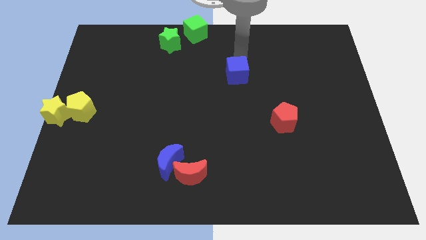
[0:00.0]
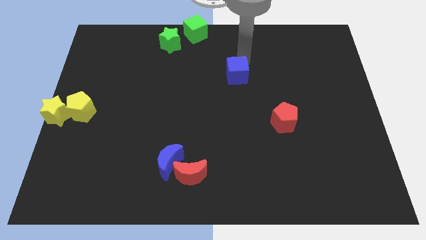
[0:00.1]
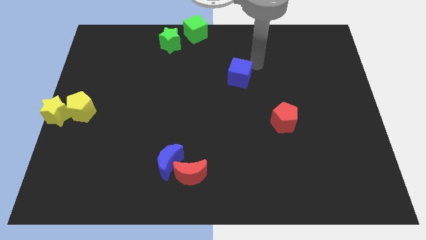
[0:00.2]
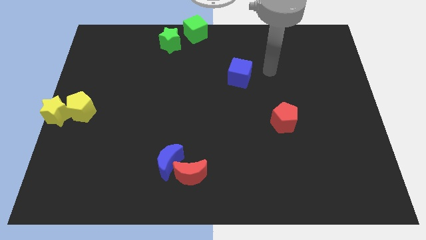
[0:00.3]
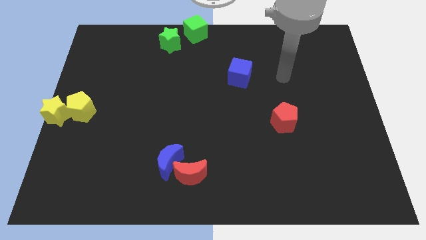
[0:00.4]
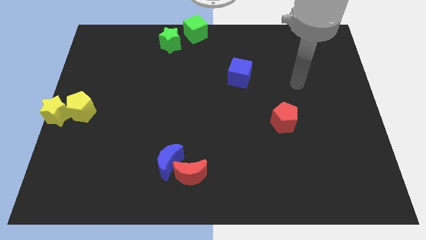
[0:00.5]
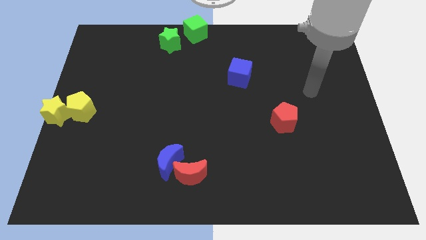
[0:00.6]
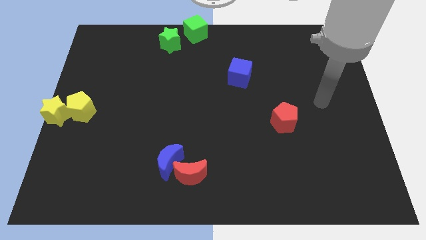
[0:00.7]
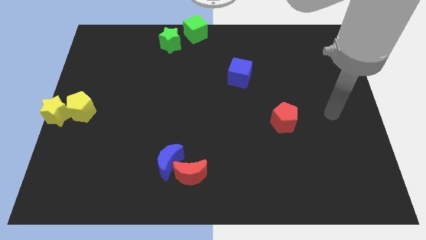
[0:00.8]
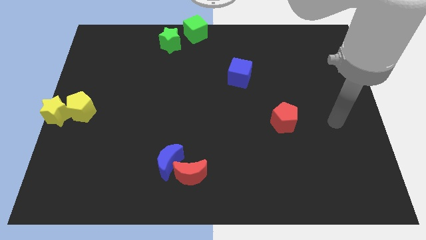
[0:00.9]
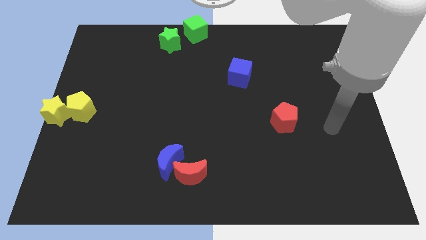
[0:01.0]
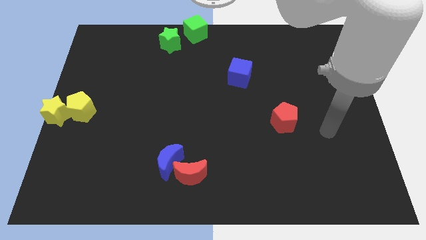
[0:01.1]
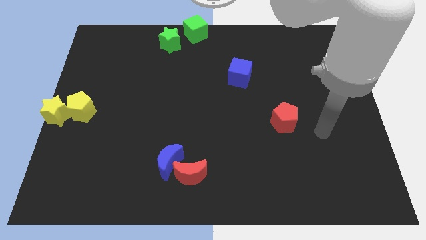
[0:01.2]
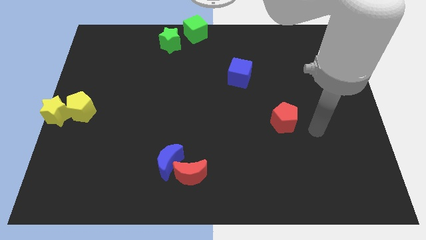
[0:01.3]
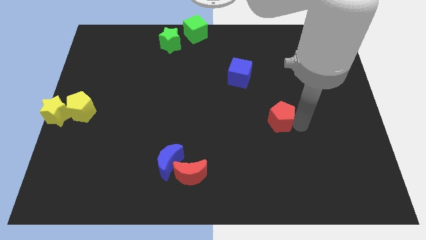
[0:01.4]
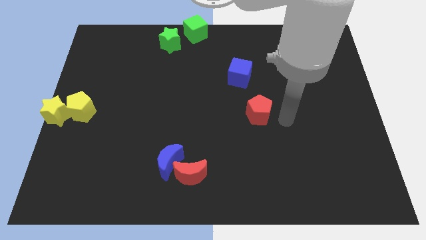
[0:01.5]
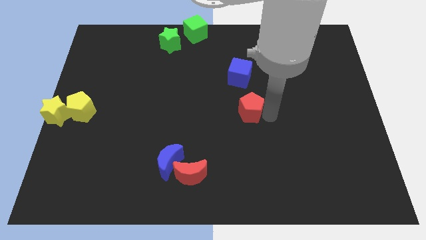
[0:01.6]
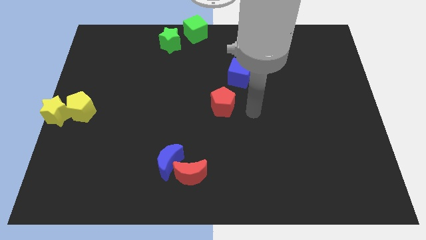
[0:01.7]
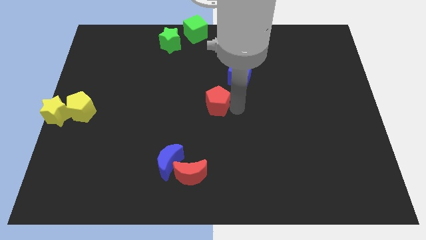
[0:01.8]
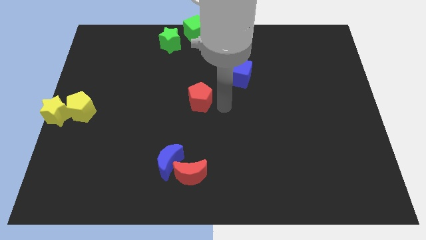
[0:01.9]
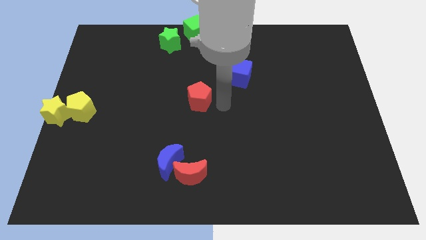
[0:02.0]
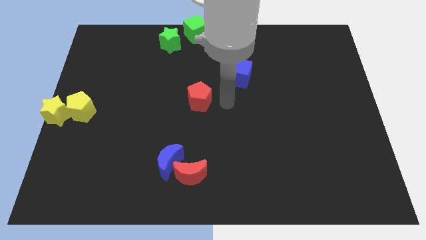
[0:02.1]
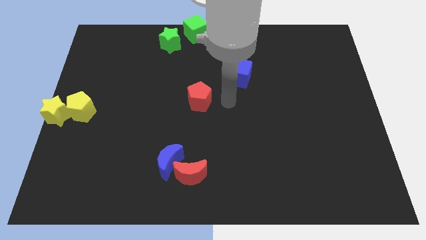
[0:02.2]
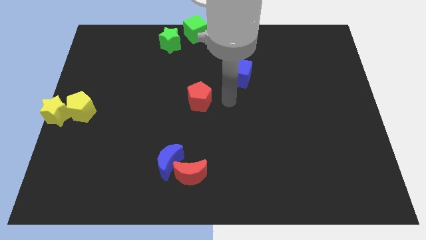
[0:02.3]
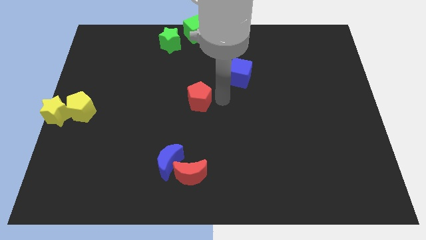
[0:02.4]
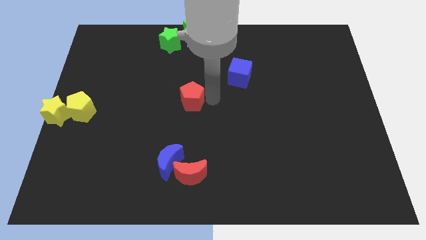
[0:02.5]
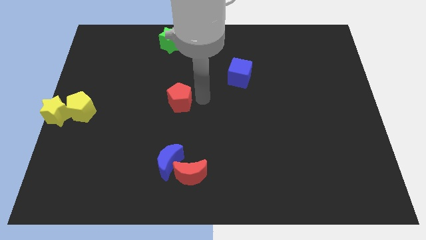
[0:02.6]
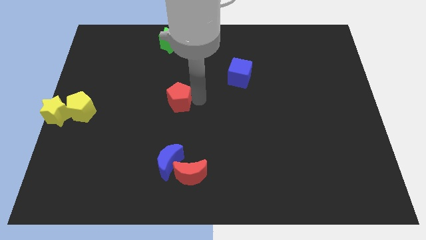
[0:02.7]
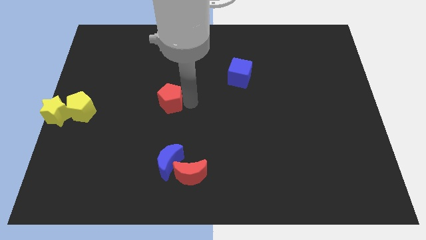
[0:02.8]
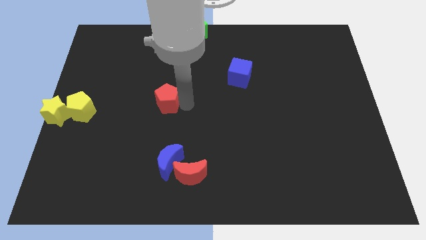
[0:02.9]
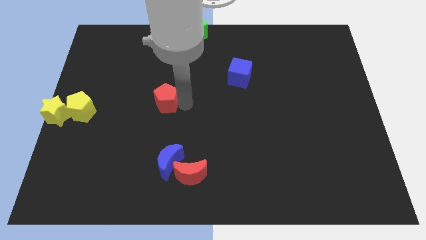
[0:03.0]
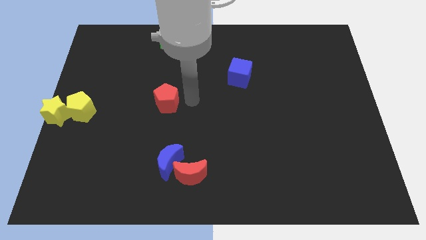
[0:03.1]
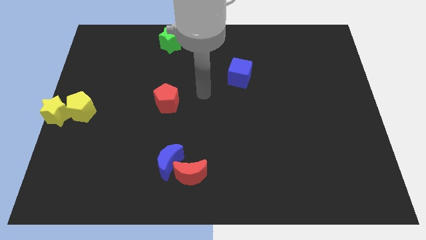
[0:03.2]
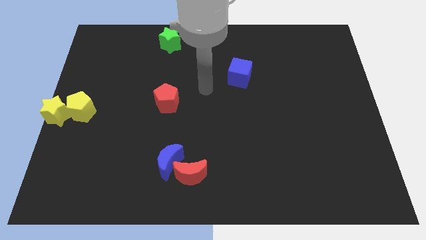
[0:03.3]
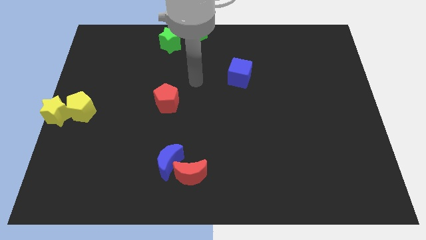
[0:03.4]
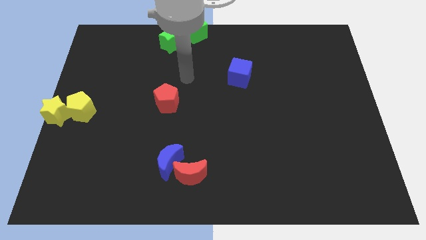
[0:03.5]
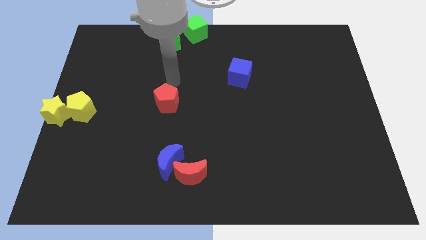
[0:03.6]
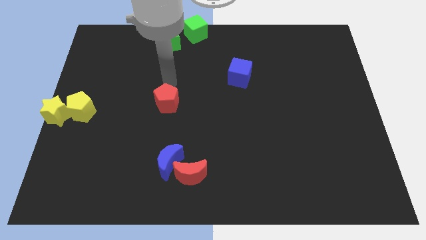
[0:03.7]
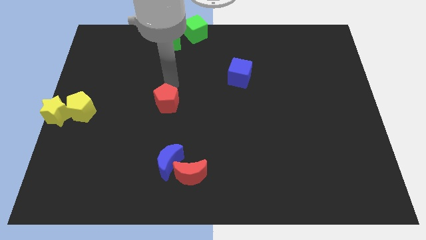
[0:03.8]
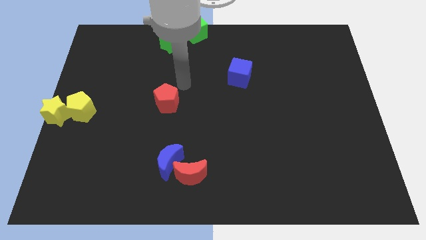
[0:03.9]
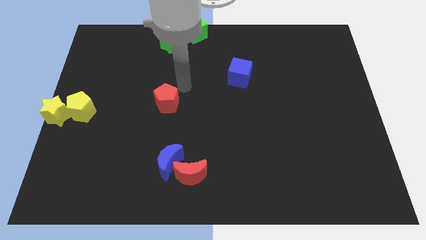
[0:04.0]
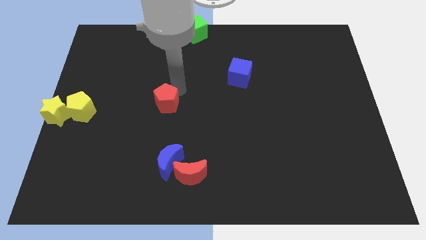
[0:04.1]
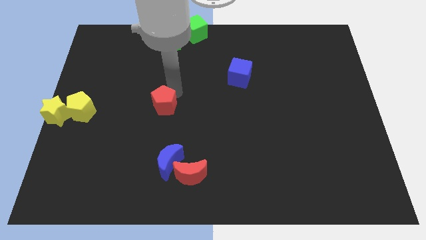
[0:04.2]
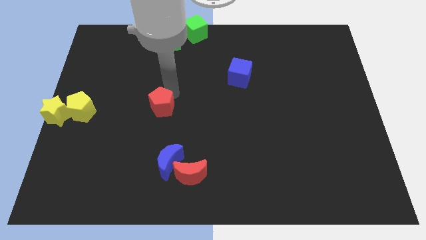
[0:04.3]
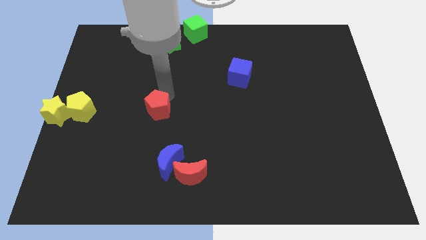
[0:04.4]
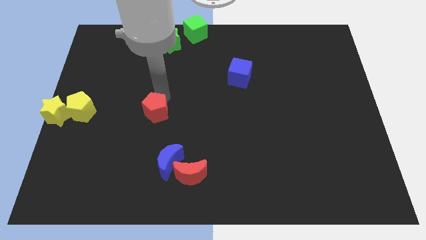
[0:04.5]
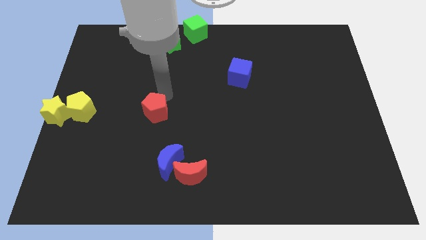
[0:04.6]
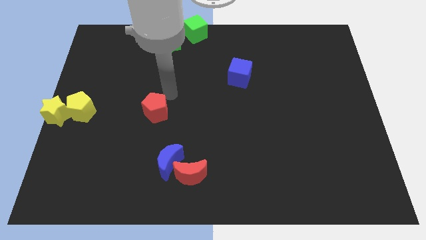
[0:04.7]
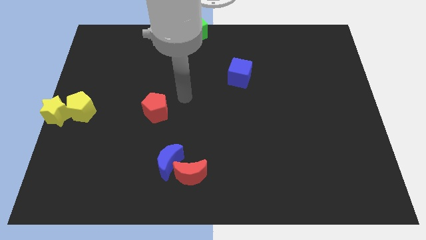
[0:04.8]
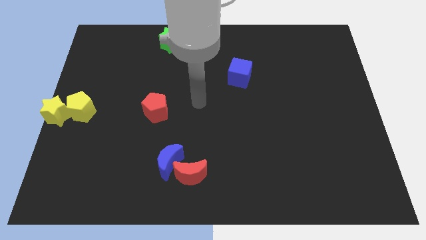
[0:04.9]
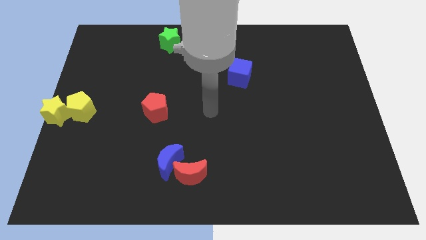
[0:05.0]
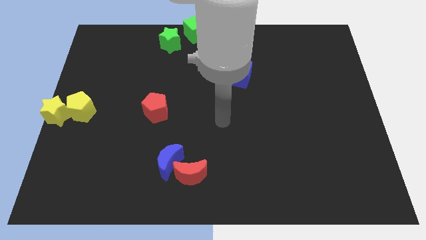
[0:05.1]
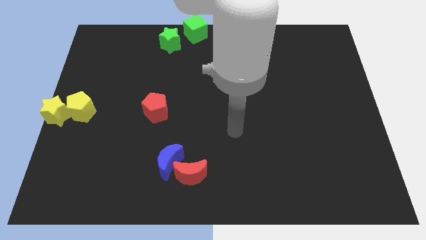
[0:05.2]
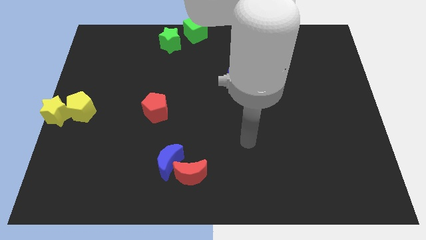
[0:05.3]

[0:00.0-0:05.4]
push the red pentagon towards the right side of the yellow pentagon

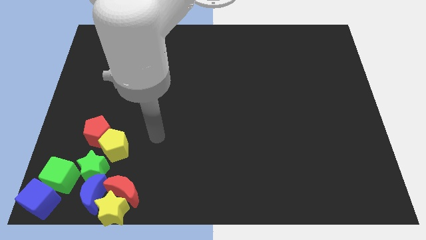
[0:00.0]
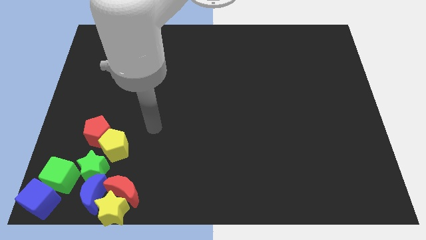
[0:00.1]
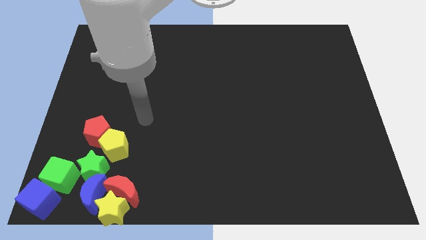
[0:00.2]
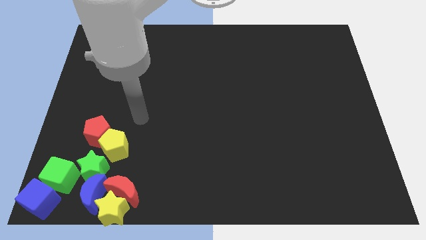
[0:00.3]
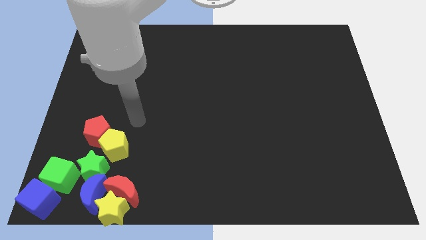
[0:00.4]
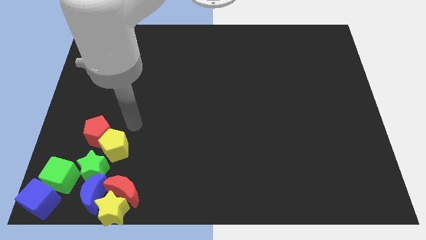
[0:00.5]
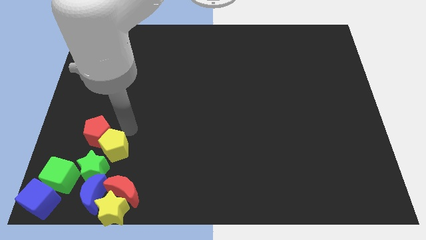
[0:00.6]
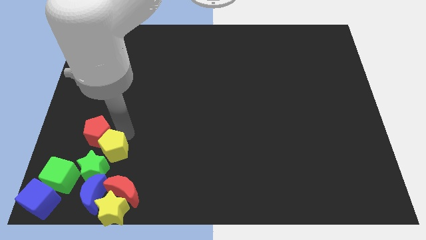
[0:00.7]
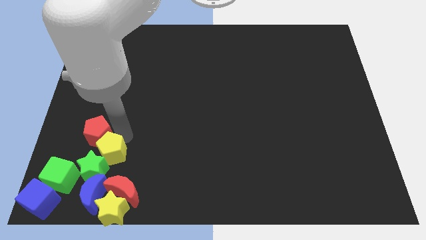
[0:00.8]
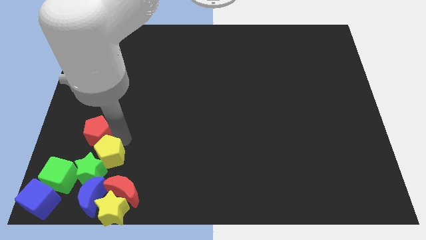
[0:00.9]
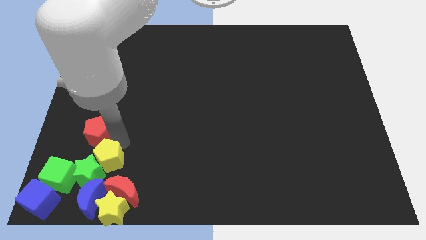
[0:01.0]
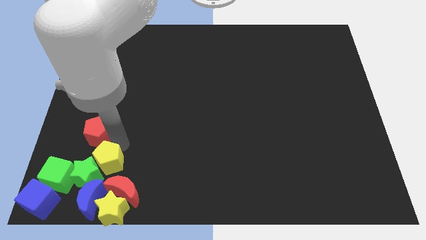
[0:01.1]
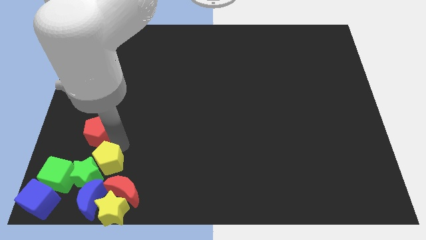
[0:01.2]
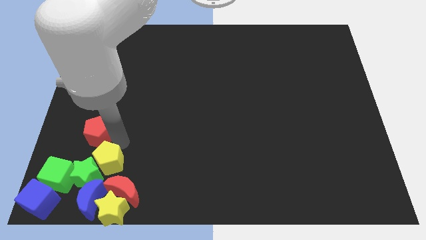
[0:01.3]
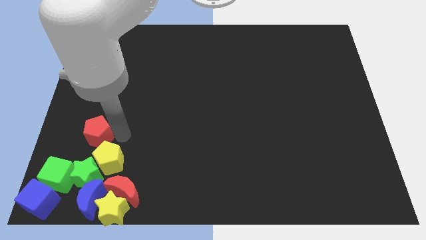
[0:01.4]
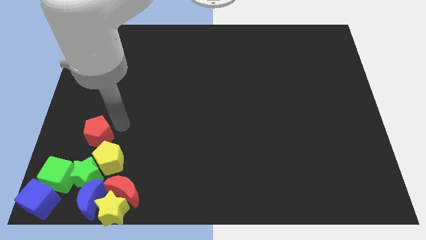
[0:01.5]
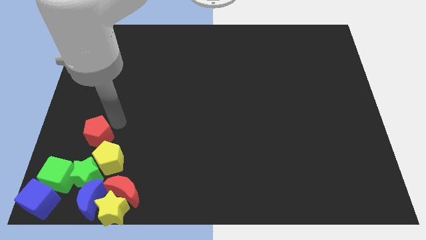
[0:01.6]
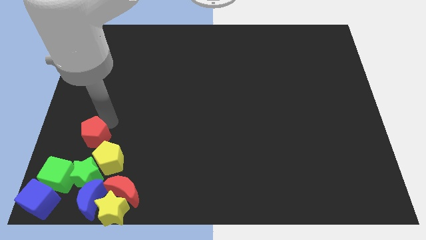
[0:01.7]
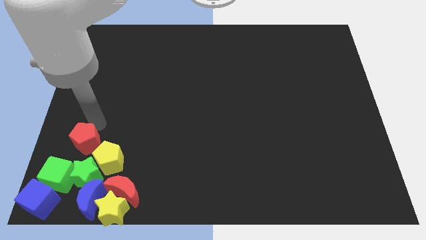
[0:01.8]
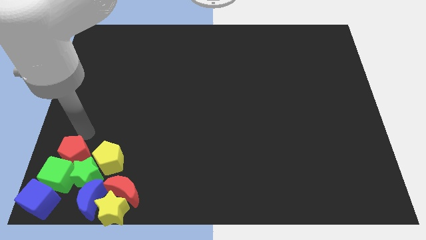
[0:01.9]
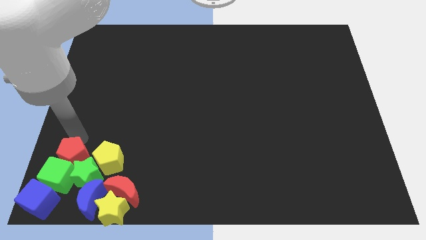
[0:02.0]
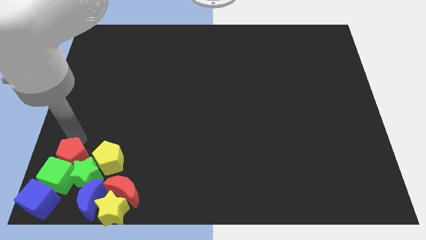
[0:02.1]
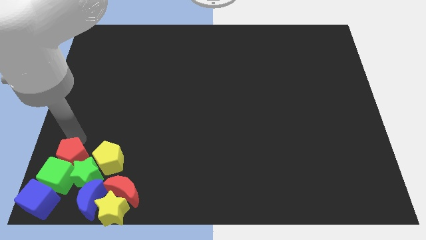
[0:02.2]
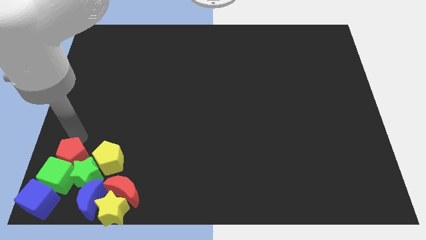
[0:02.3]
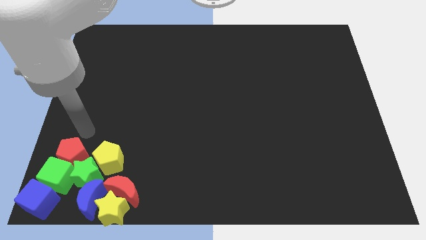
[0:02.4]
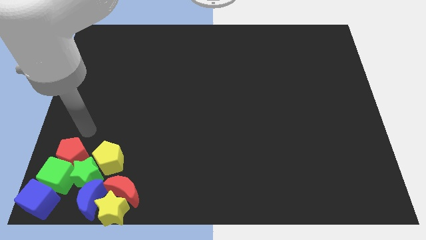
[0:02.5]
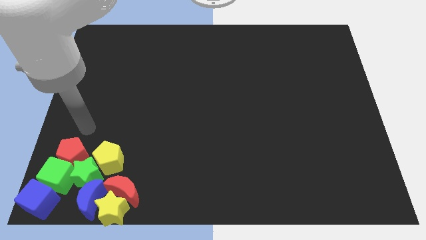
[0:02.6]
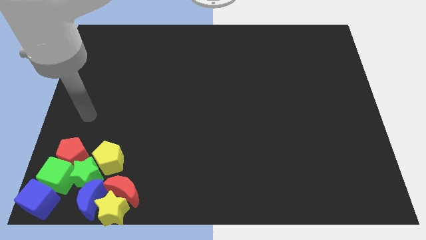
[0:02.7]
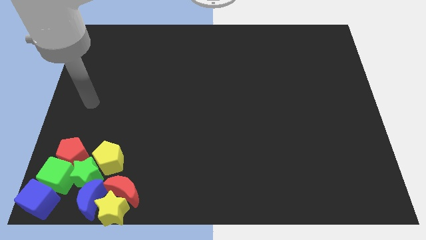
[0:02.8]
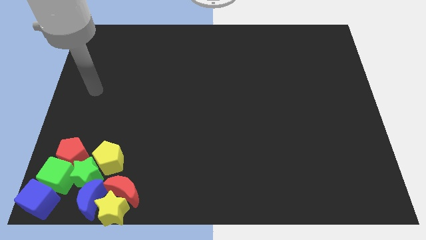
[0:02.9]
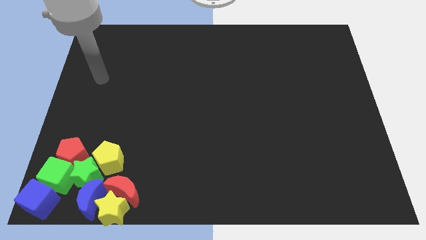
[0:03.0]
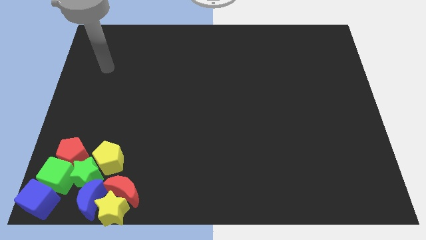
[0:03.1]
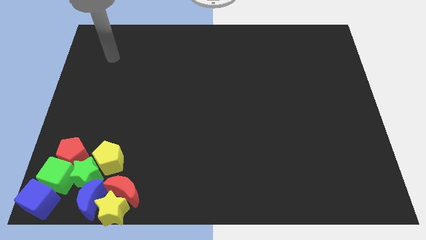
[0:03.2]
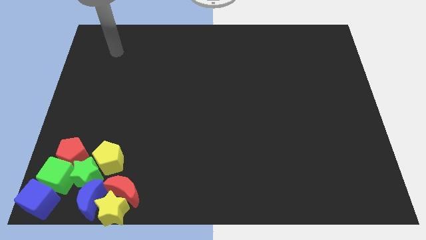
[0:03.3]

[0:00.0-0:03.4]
push the pentagons towards the bottom side of the board

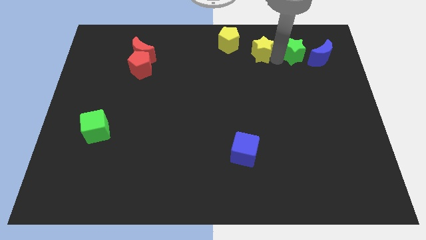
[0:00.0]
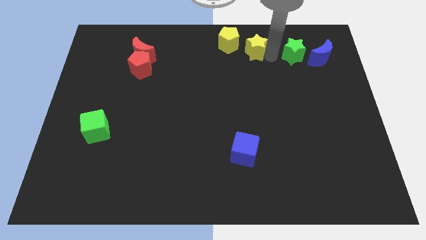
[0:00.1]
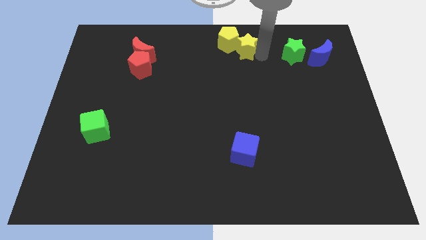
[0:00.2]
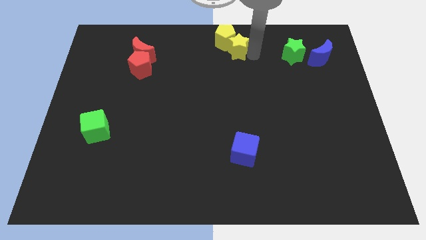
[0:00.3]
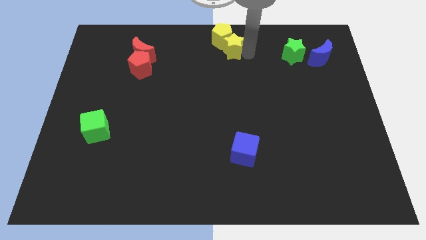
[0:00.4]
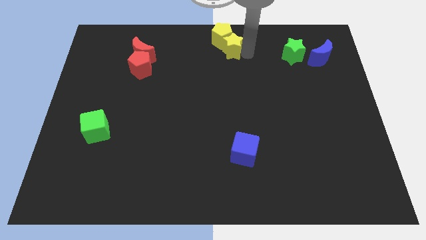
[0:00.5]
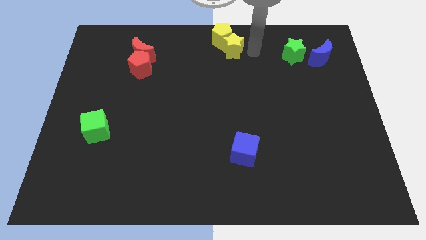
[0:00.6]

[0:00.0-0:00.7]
place yellow star to the bottom right of yellow pentagon
